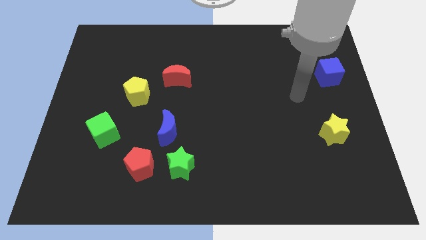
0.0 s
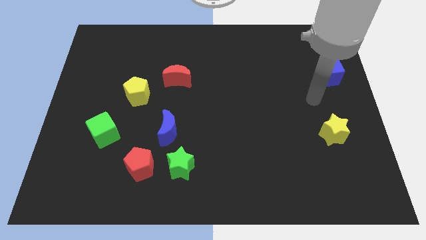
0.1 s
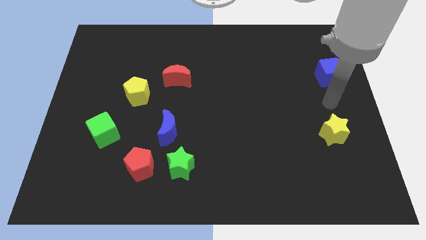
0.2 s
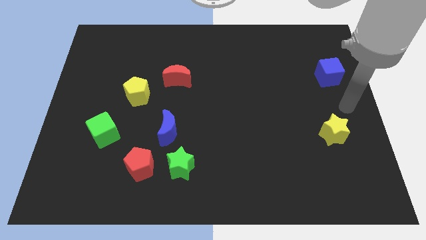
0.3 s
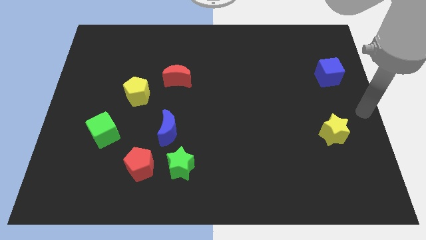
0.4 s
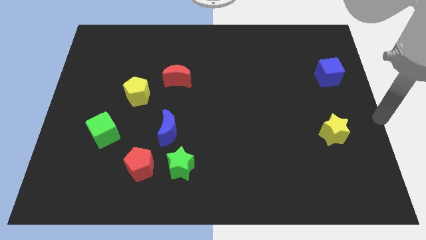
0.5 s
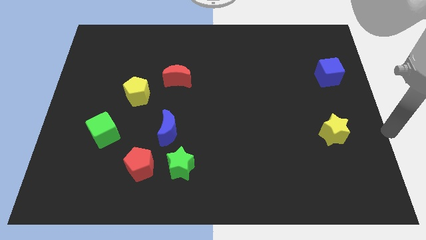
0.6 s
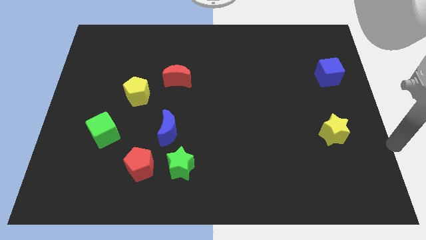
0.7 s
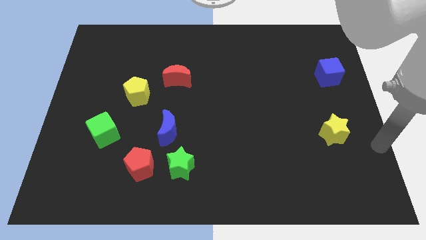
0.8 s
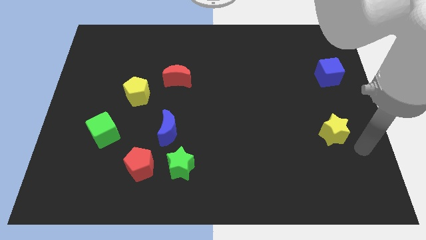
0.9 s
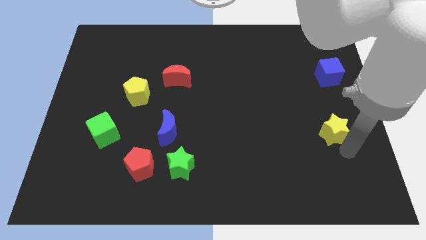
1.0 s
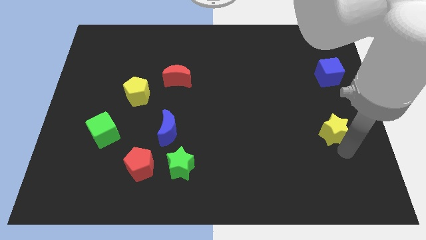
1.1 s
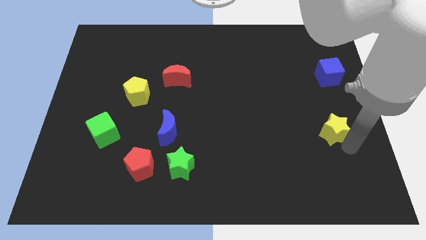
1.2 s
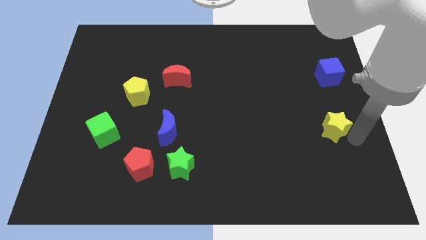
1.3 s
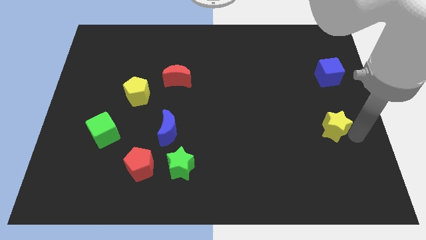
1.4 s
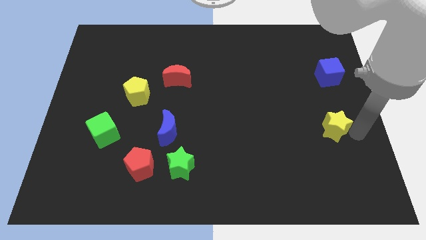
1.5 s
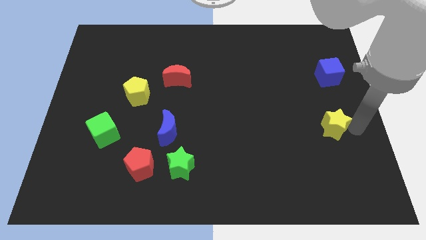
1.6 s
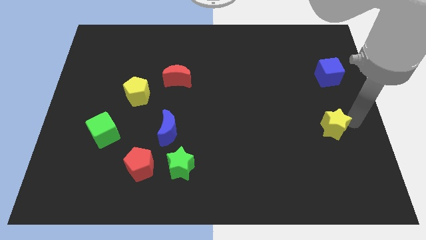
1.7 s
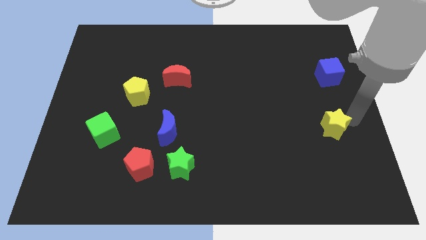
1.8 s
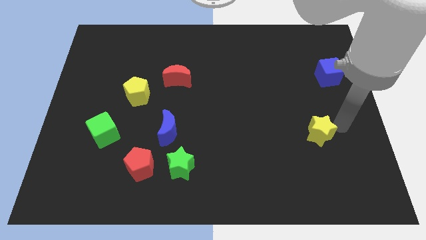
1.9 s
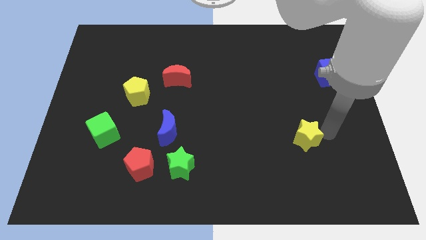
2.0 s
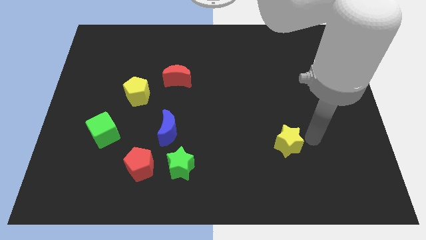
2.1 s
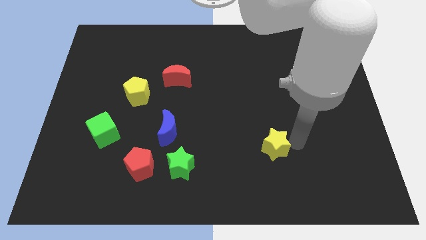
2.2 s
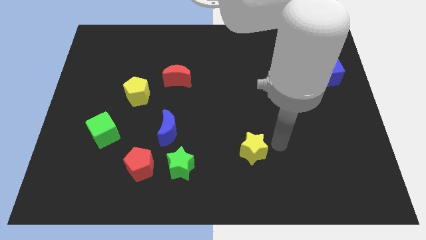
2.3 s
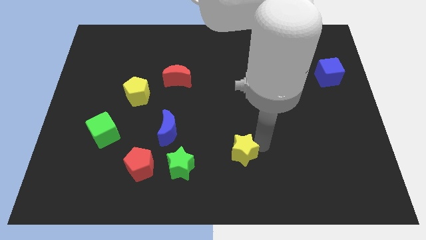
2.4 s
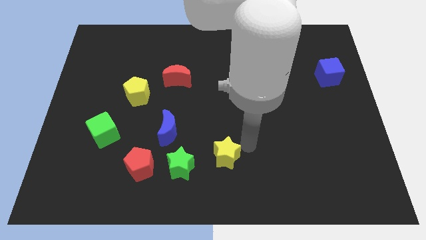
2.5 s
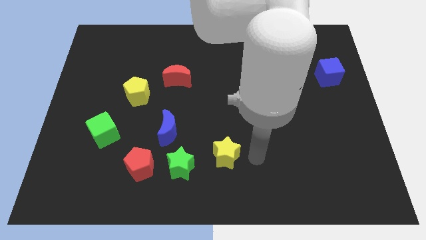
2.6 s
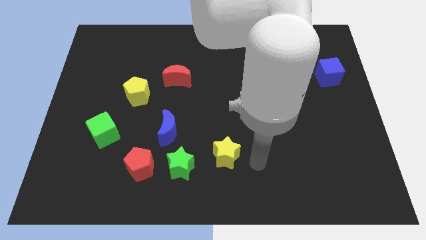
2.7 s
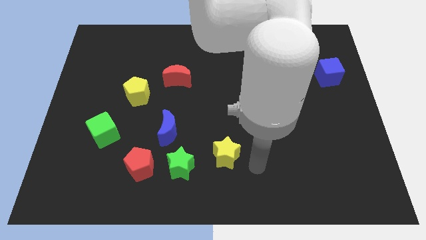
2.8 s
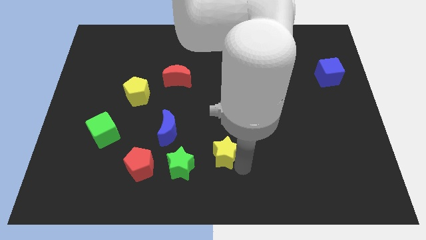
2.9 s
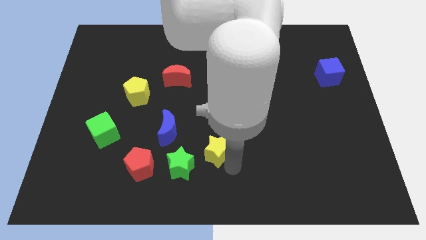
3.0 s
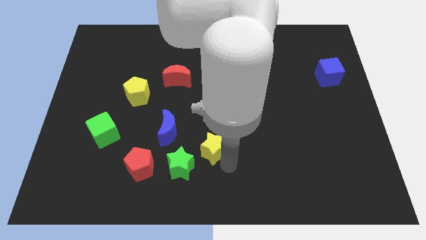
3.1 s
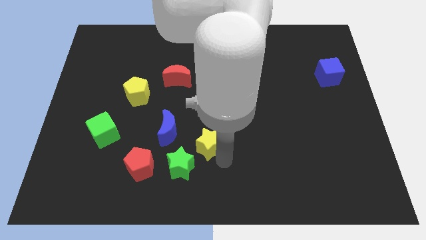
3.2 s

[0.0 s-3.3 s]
move the yellow star to the right of the blue crescent

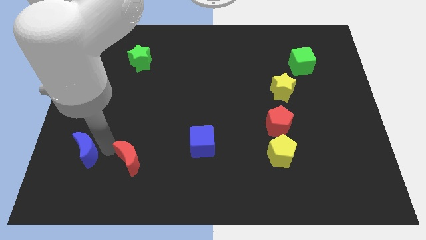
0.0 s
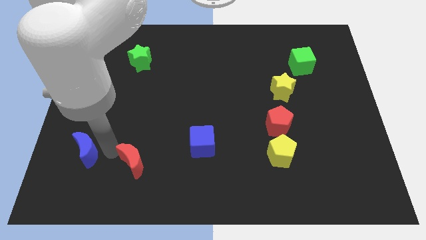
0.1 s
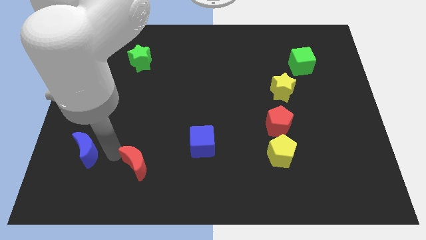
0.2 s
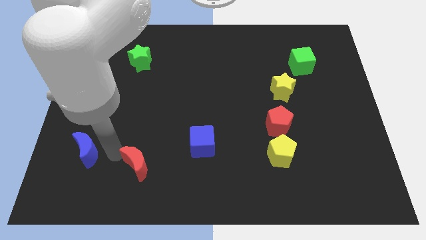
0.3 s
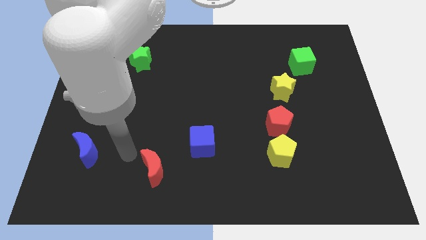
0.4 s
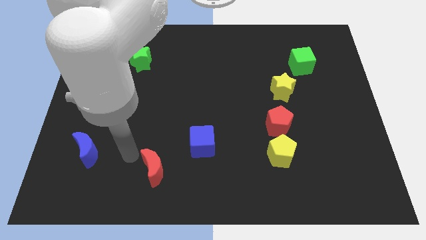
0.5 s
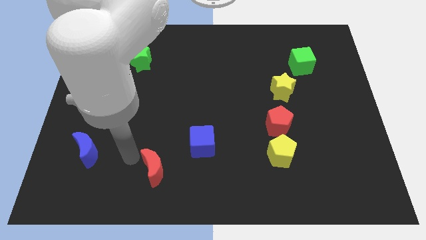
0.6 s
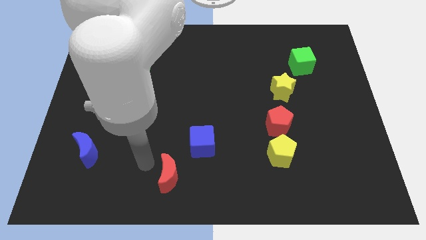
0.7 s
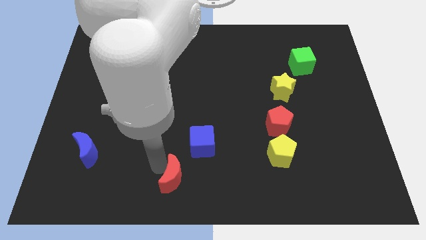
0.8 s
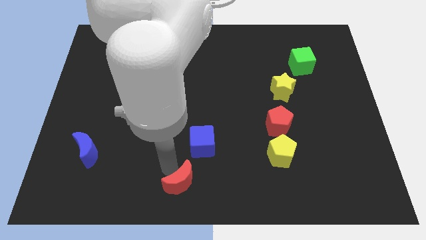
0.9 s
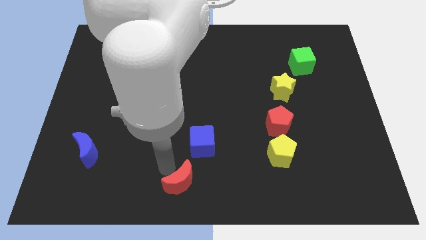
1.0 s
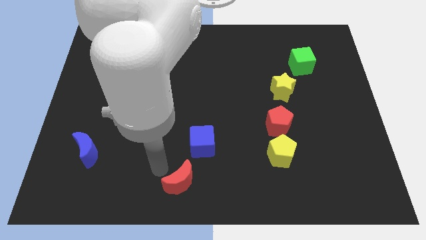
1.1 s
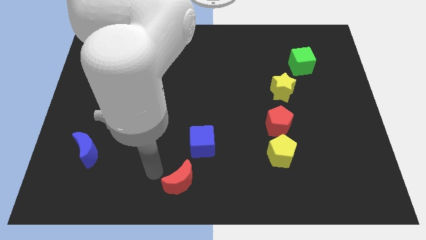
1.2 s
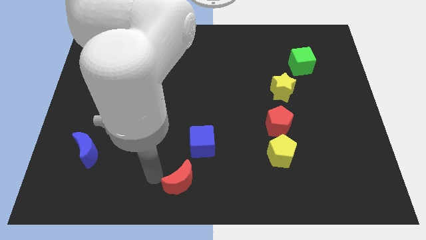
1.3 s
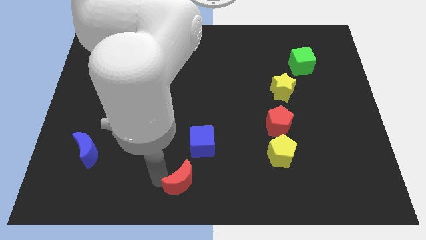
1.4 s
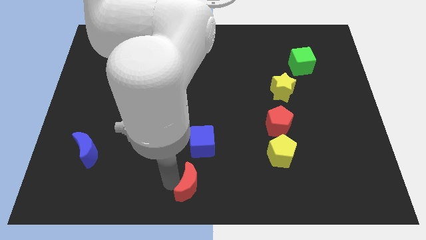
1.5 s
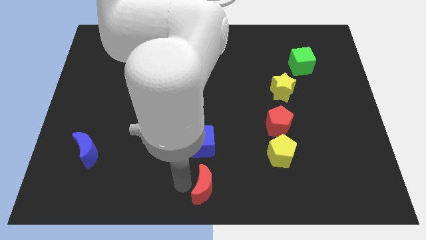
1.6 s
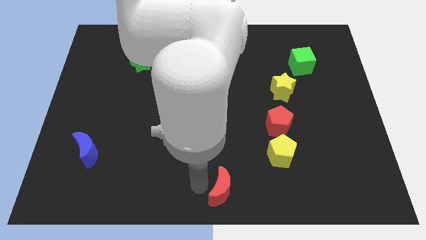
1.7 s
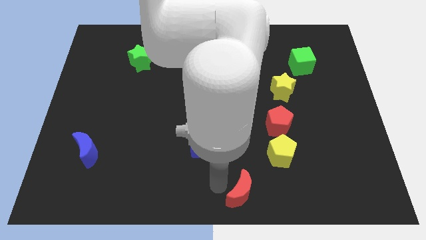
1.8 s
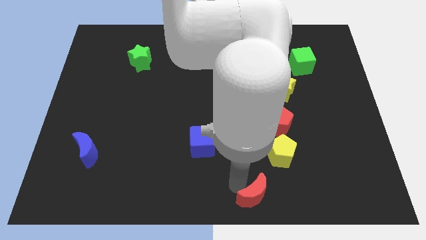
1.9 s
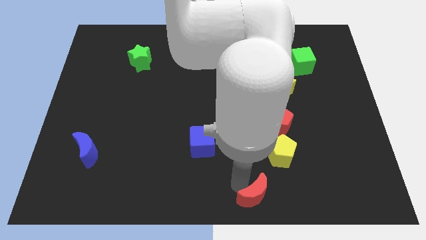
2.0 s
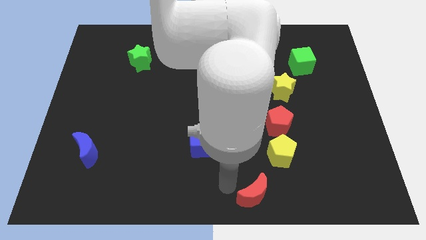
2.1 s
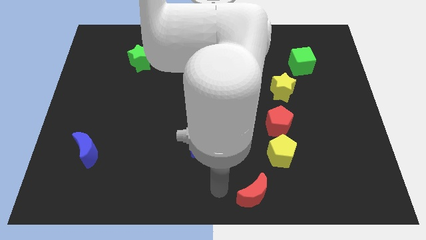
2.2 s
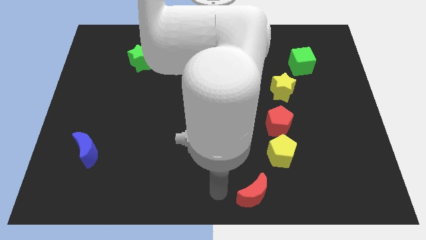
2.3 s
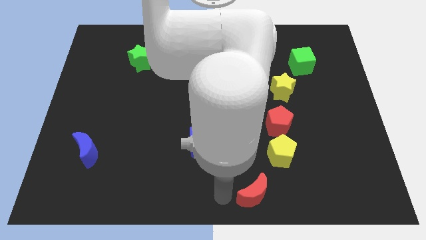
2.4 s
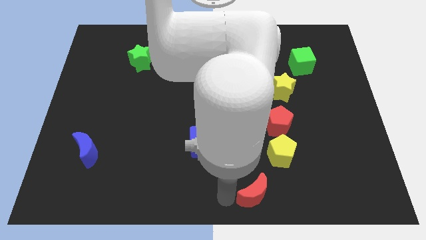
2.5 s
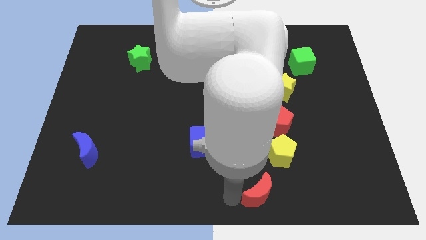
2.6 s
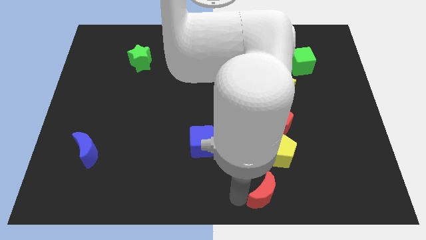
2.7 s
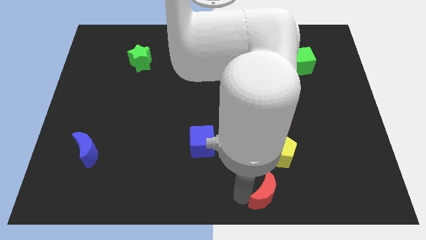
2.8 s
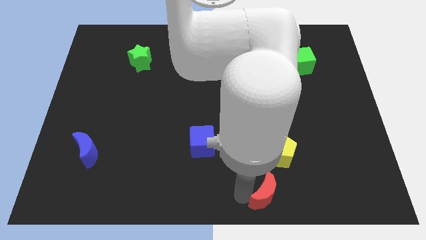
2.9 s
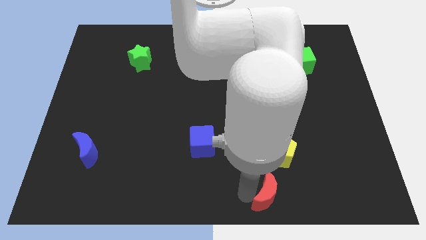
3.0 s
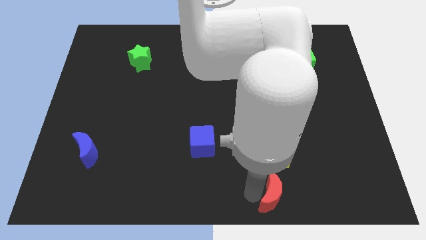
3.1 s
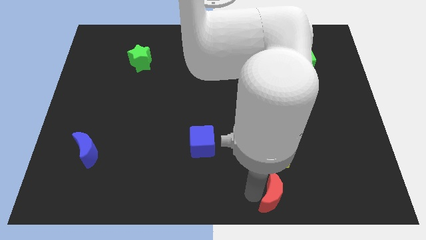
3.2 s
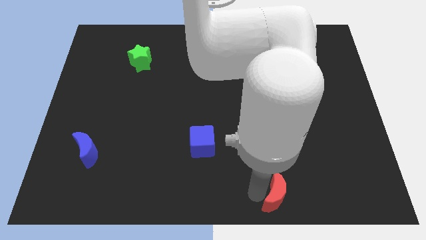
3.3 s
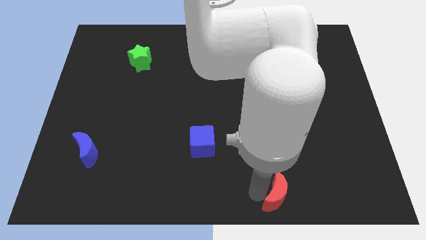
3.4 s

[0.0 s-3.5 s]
place red crescent under yellow pentagon

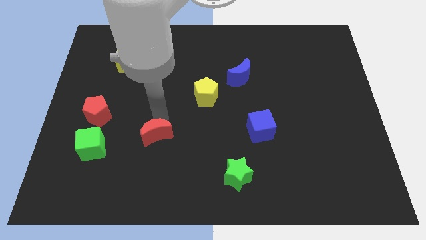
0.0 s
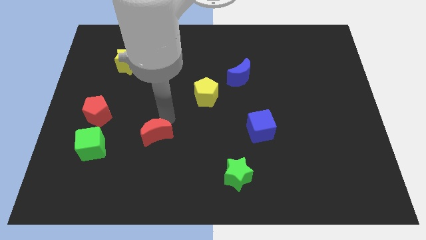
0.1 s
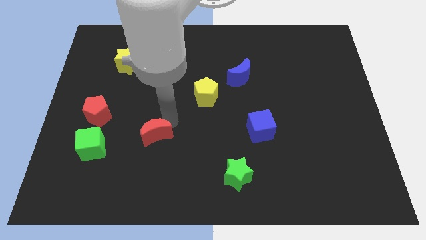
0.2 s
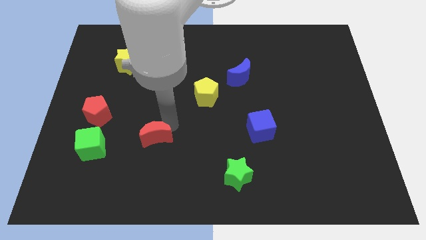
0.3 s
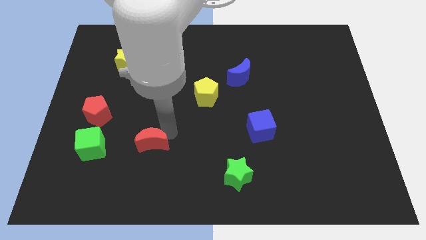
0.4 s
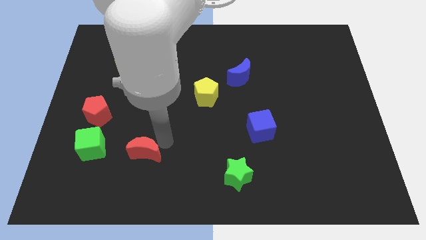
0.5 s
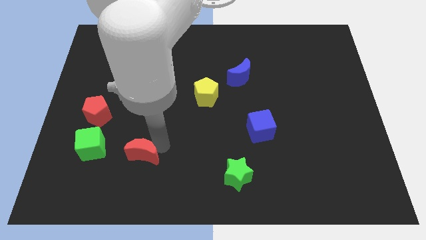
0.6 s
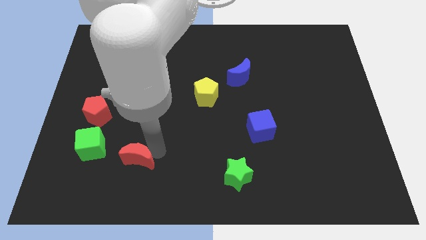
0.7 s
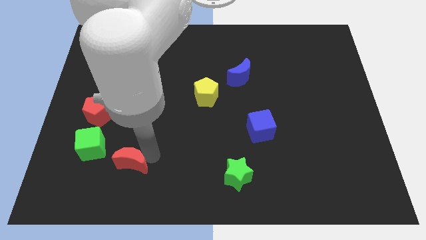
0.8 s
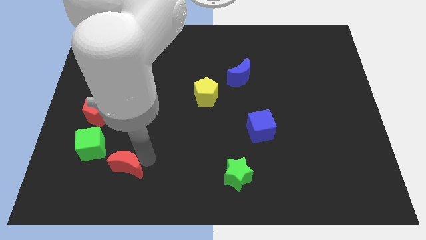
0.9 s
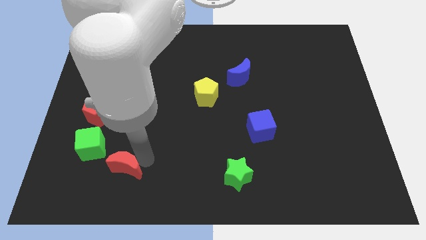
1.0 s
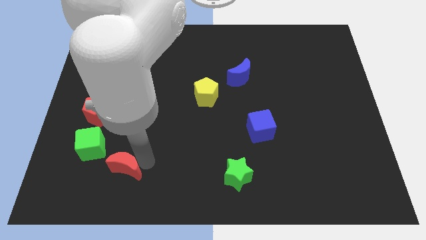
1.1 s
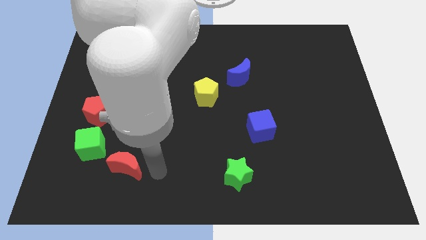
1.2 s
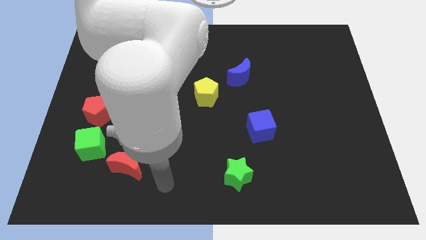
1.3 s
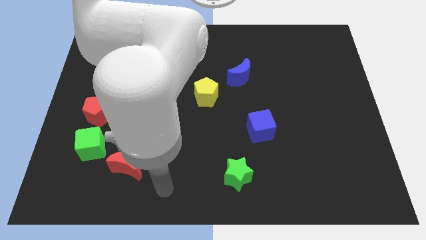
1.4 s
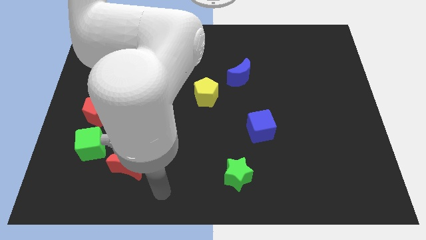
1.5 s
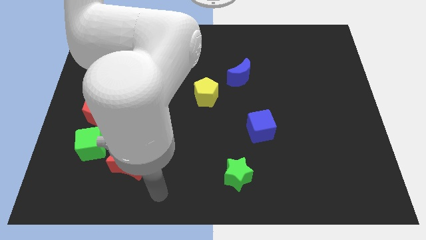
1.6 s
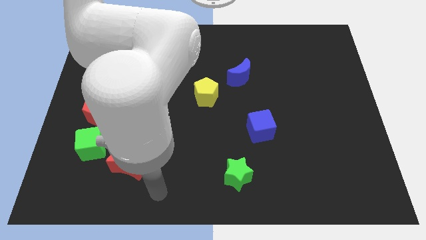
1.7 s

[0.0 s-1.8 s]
move red moon to the bottom right of green cube

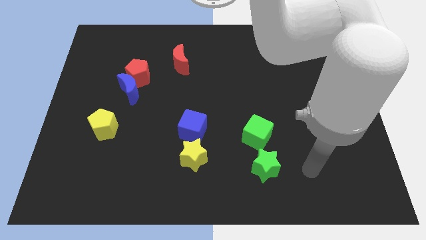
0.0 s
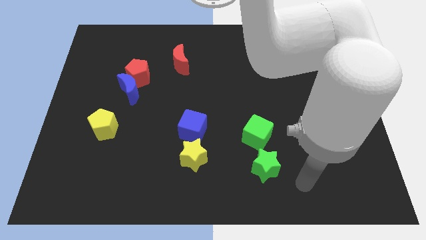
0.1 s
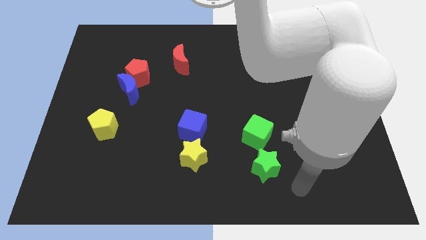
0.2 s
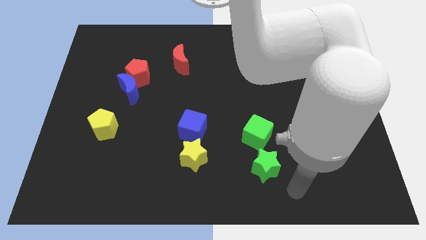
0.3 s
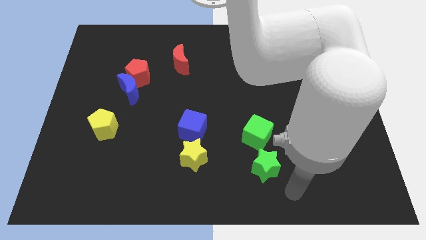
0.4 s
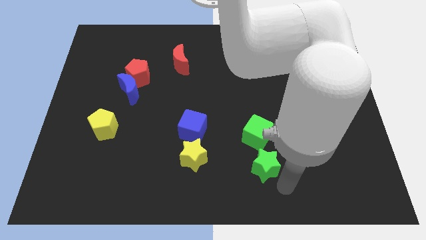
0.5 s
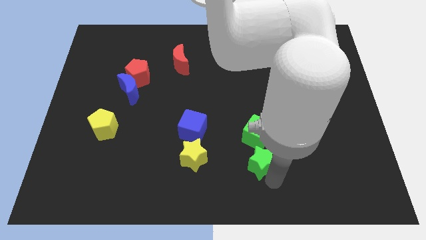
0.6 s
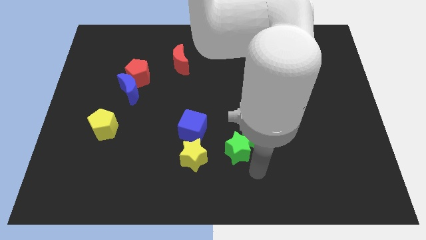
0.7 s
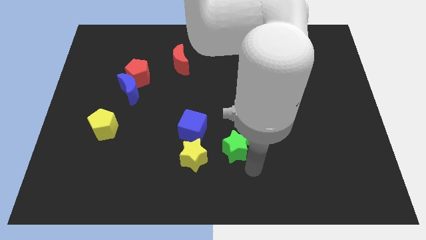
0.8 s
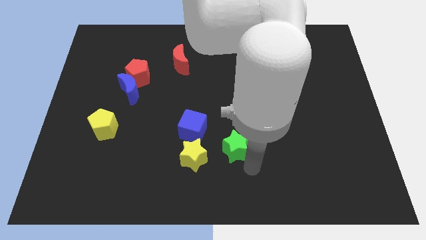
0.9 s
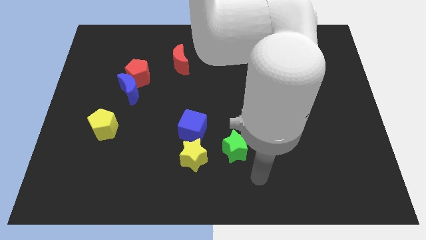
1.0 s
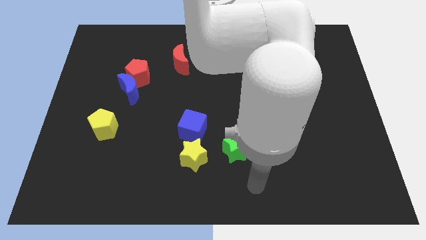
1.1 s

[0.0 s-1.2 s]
move the green star in between green cube and yellow star
